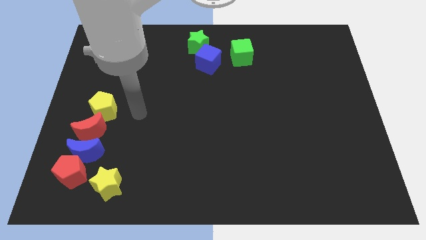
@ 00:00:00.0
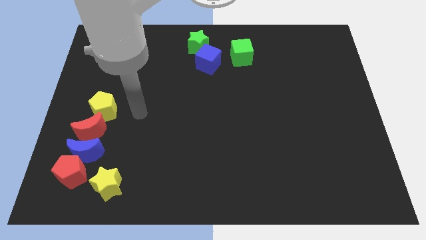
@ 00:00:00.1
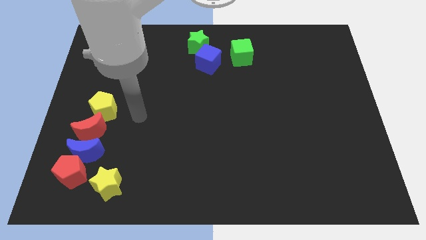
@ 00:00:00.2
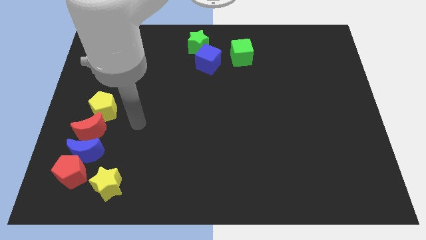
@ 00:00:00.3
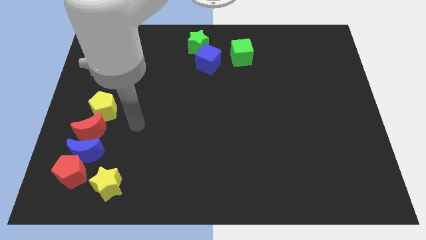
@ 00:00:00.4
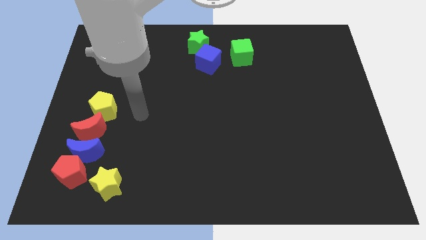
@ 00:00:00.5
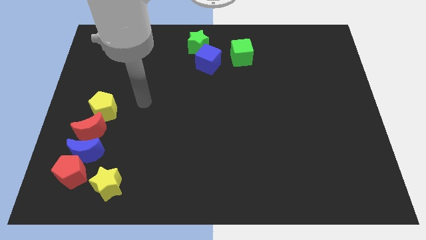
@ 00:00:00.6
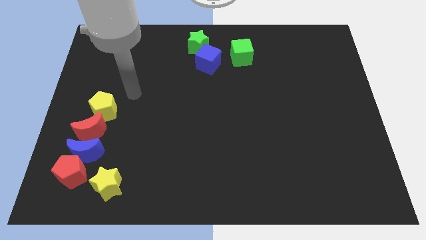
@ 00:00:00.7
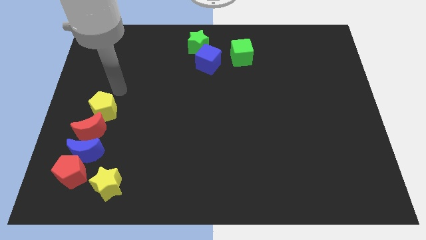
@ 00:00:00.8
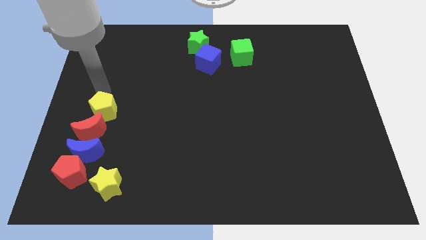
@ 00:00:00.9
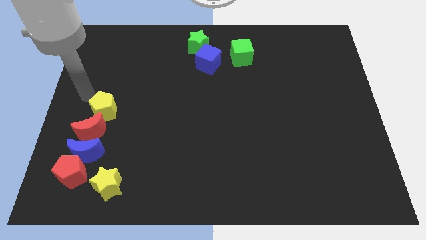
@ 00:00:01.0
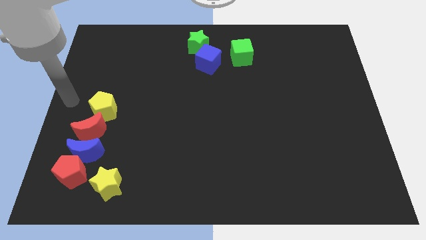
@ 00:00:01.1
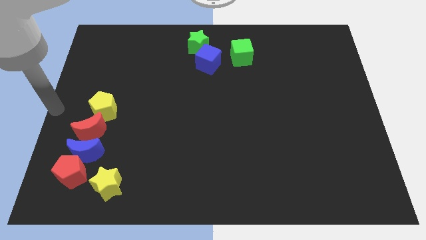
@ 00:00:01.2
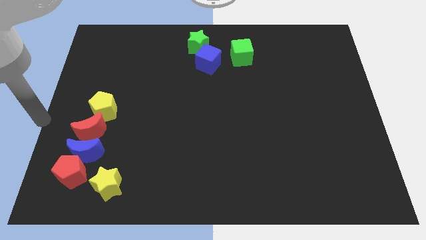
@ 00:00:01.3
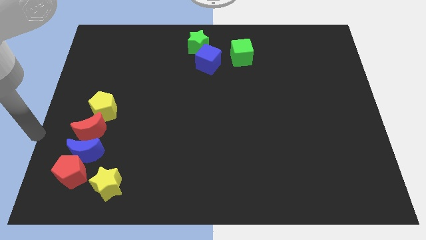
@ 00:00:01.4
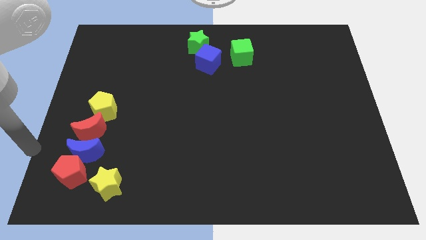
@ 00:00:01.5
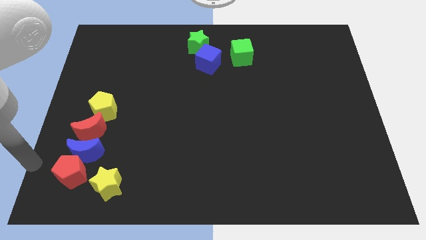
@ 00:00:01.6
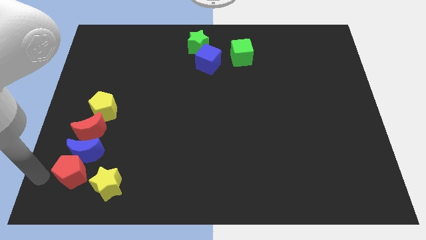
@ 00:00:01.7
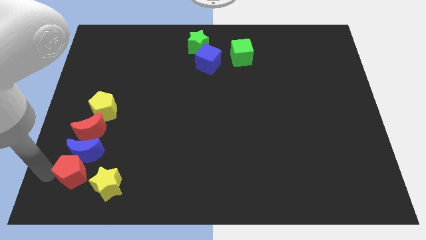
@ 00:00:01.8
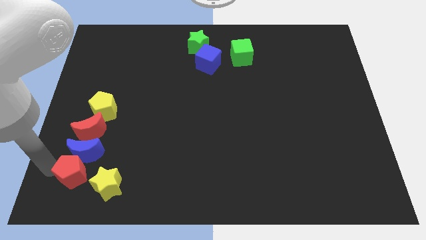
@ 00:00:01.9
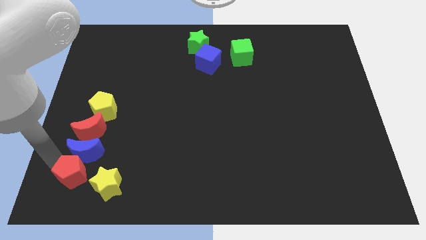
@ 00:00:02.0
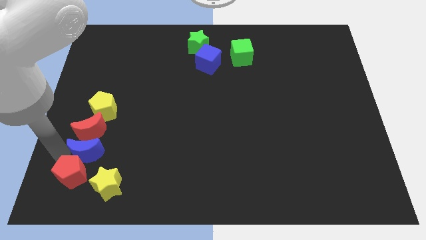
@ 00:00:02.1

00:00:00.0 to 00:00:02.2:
move the arm to the left of the blue moon

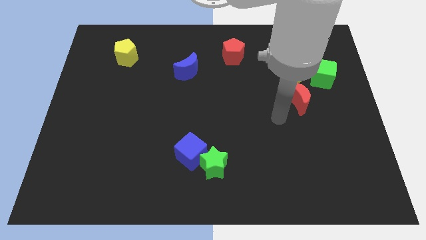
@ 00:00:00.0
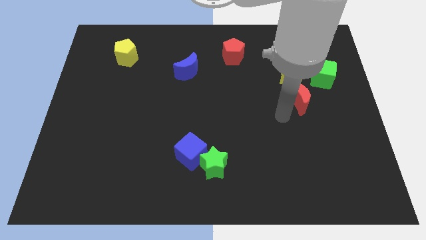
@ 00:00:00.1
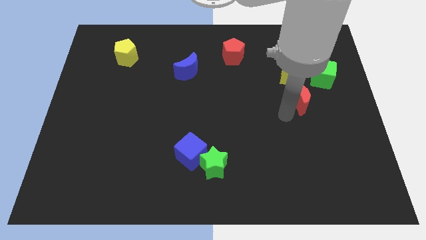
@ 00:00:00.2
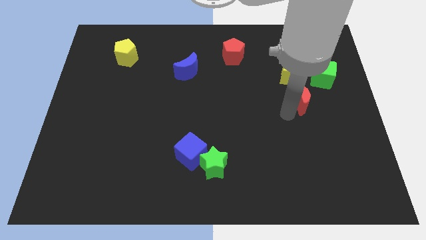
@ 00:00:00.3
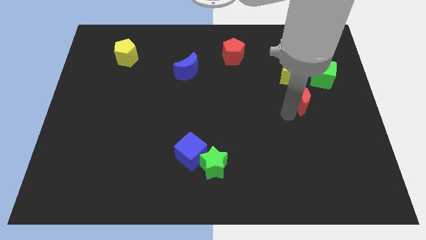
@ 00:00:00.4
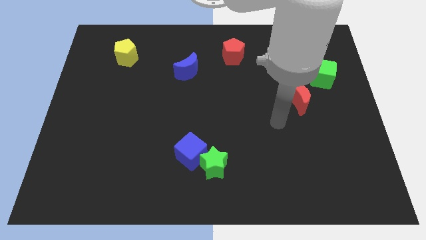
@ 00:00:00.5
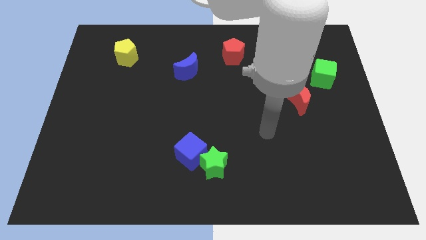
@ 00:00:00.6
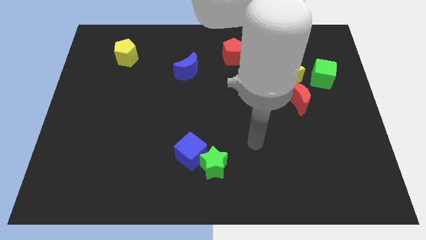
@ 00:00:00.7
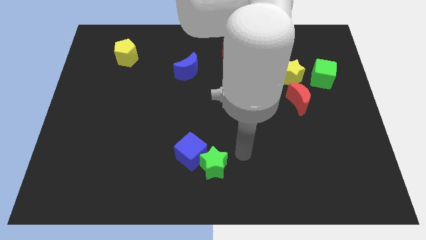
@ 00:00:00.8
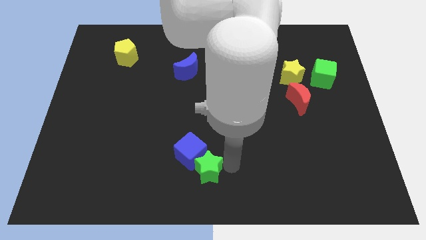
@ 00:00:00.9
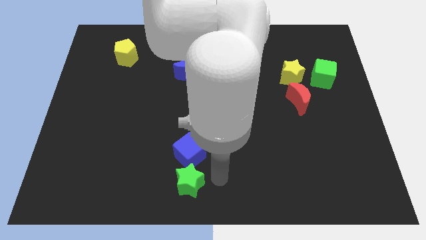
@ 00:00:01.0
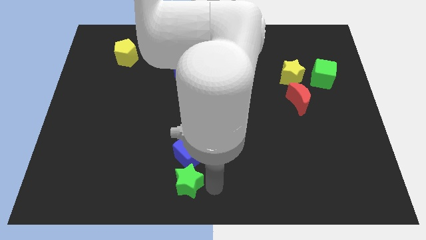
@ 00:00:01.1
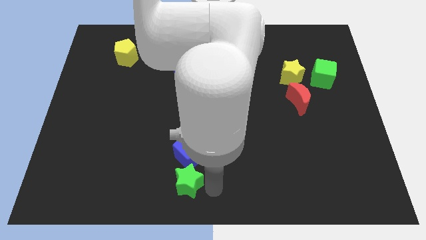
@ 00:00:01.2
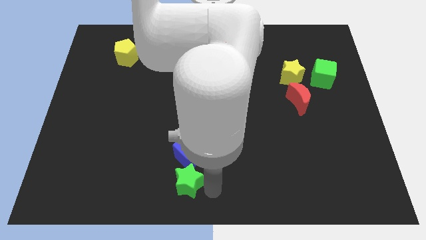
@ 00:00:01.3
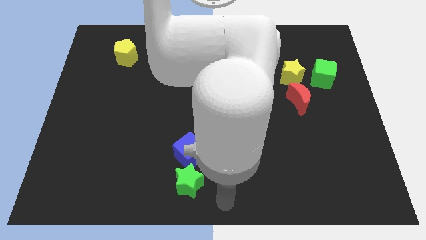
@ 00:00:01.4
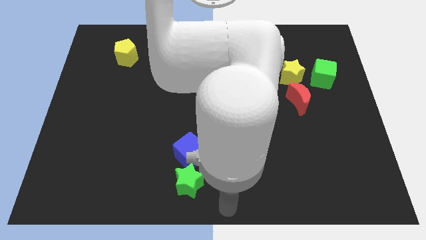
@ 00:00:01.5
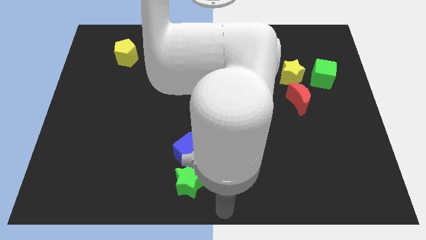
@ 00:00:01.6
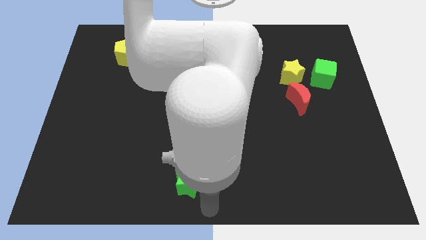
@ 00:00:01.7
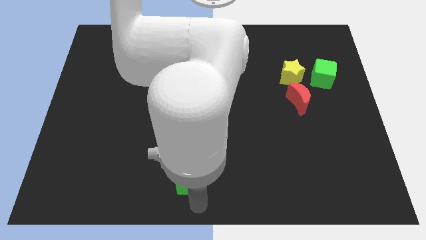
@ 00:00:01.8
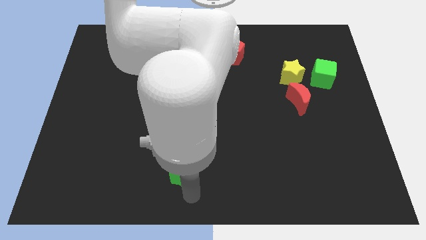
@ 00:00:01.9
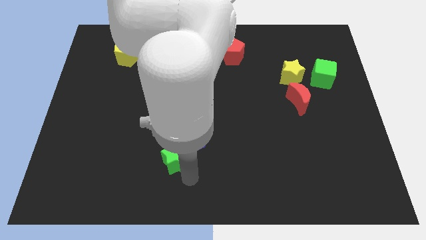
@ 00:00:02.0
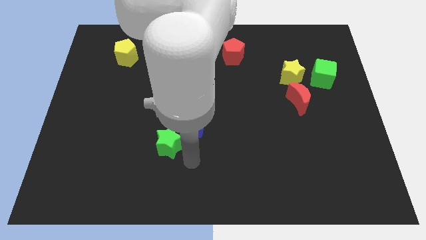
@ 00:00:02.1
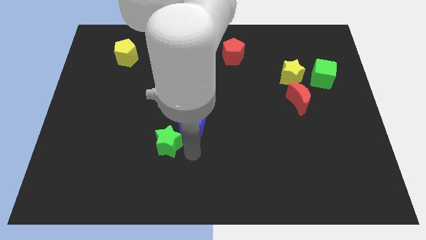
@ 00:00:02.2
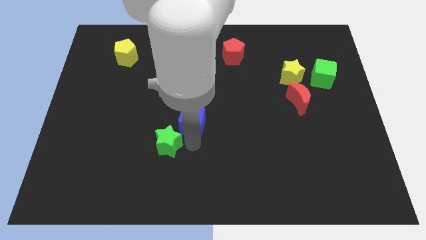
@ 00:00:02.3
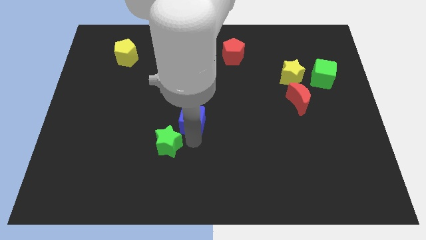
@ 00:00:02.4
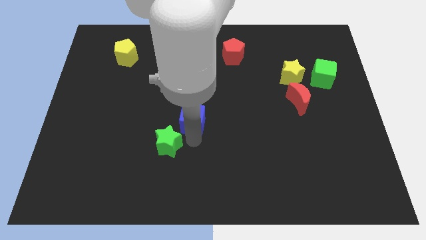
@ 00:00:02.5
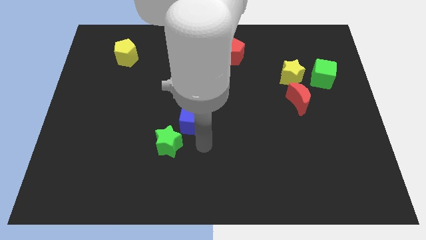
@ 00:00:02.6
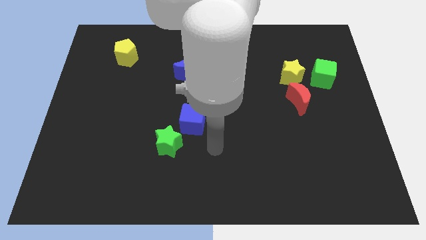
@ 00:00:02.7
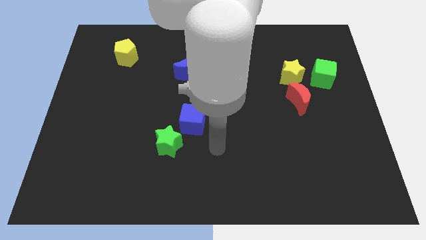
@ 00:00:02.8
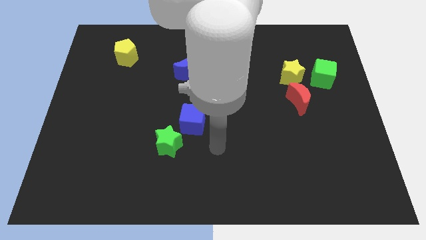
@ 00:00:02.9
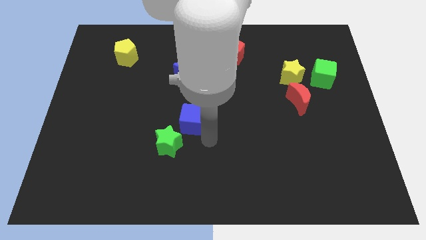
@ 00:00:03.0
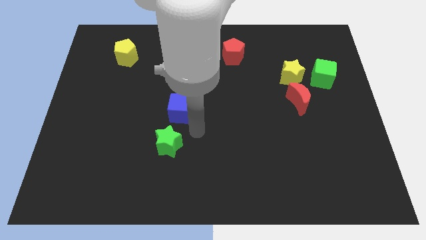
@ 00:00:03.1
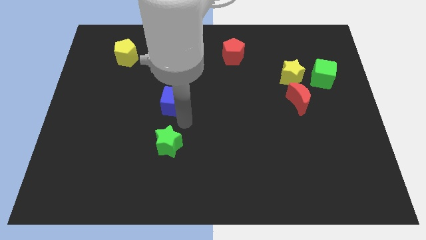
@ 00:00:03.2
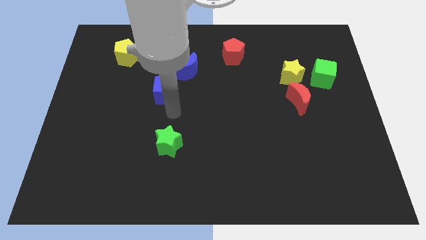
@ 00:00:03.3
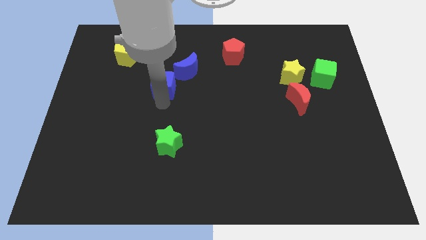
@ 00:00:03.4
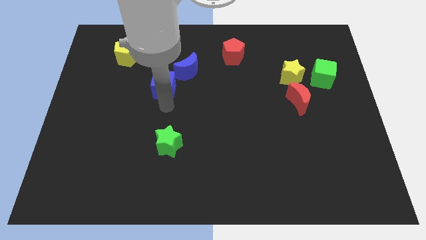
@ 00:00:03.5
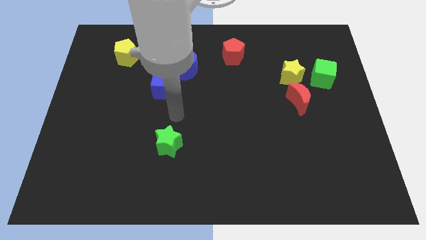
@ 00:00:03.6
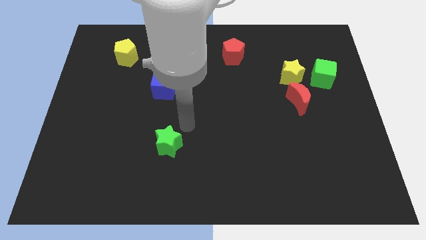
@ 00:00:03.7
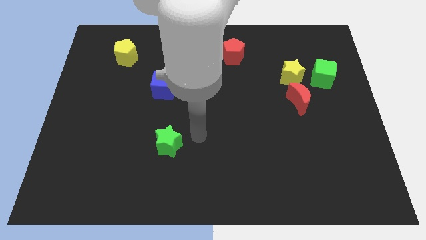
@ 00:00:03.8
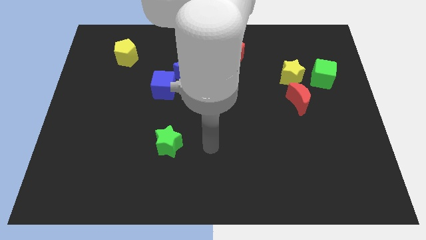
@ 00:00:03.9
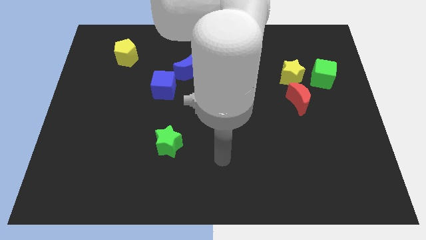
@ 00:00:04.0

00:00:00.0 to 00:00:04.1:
separate blue cube from the green star

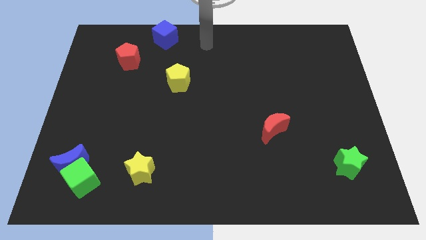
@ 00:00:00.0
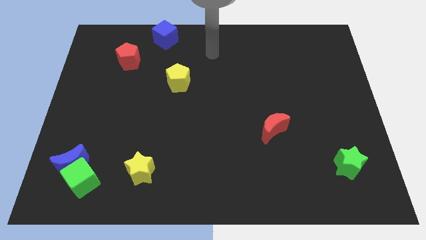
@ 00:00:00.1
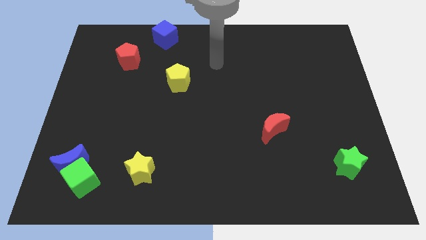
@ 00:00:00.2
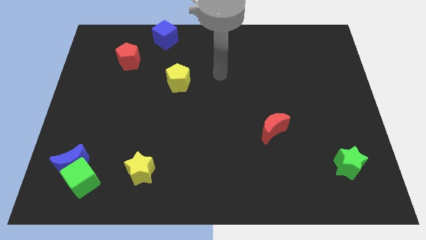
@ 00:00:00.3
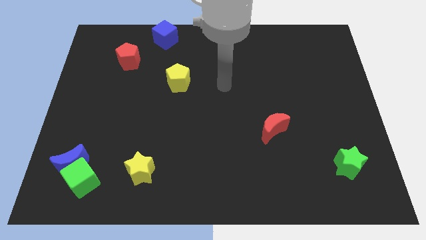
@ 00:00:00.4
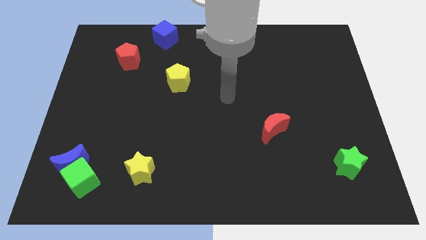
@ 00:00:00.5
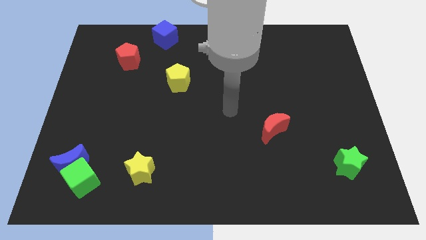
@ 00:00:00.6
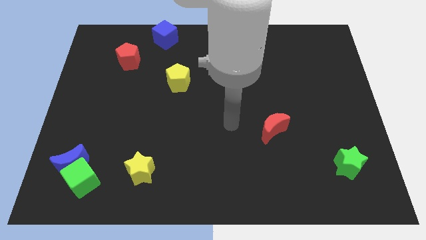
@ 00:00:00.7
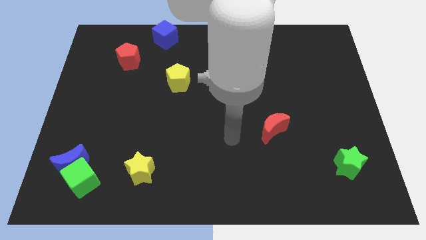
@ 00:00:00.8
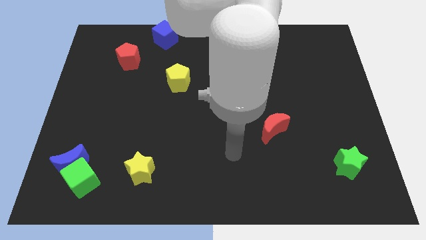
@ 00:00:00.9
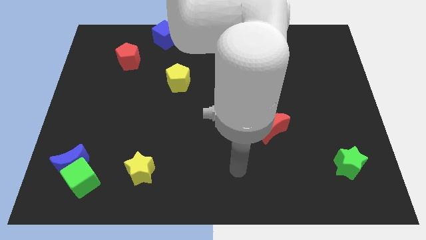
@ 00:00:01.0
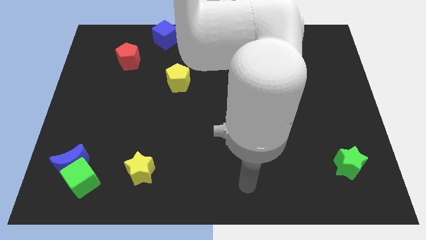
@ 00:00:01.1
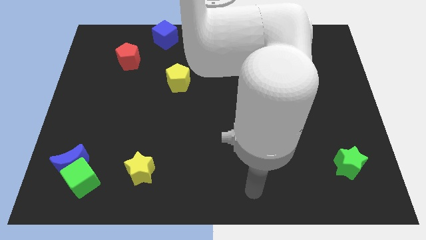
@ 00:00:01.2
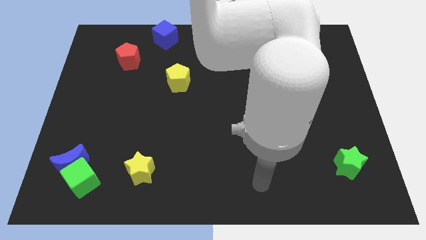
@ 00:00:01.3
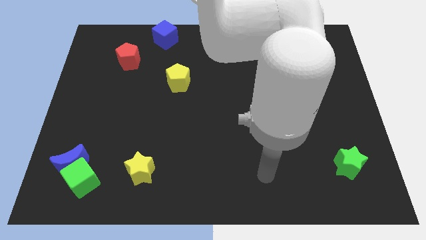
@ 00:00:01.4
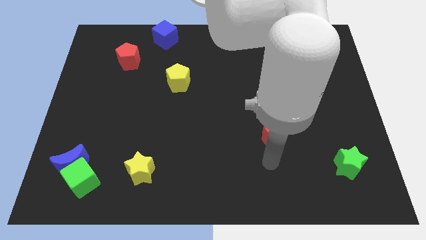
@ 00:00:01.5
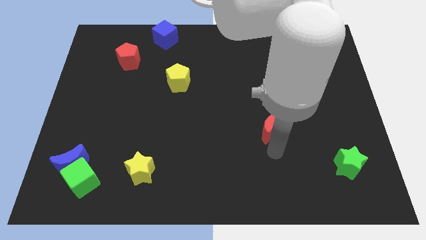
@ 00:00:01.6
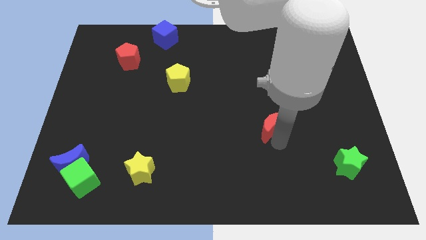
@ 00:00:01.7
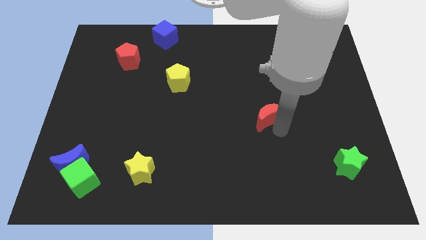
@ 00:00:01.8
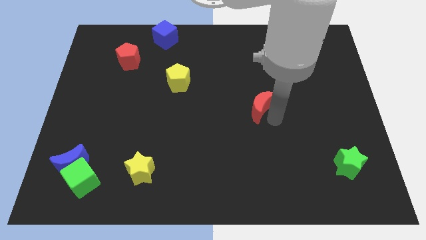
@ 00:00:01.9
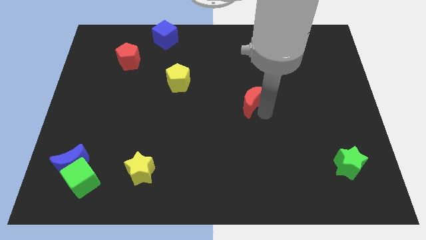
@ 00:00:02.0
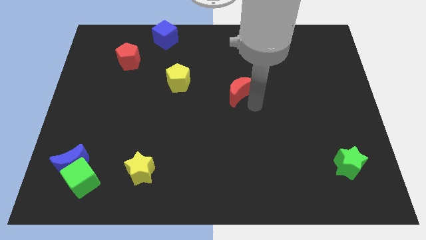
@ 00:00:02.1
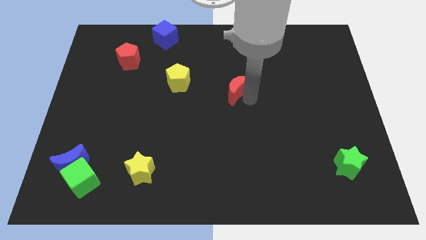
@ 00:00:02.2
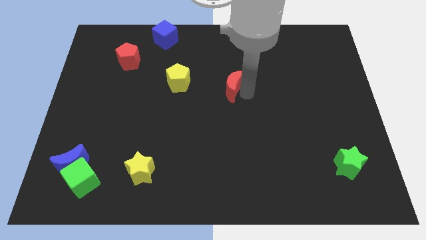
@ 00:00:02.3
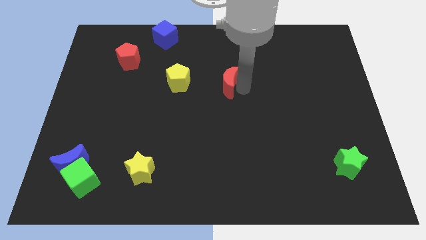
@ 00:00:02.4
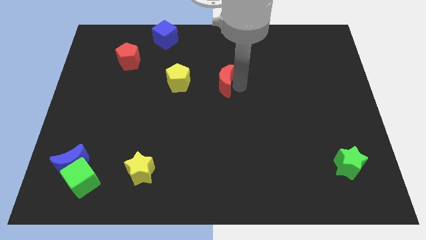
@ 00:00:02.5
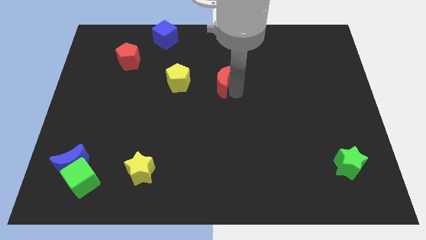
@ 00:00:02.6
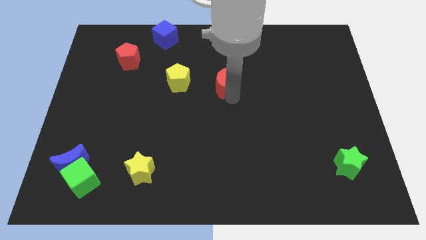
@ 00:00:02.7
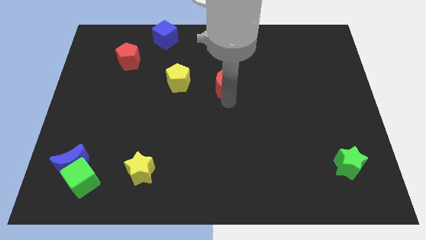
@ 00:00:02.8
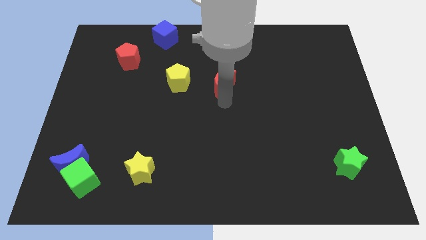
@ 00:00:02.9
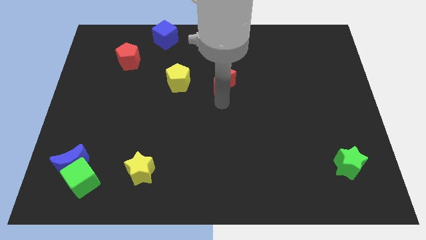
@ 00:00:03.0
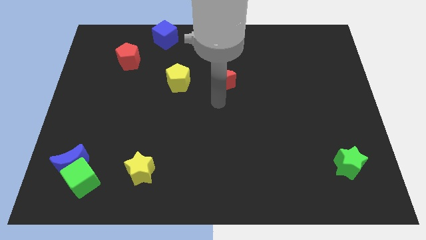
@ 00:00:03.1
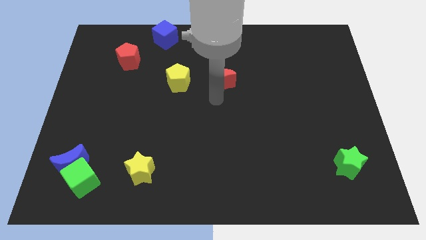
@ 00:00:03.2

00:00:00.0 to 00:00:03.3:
place the red moon horizontally to the right side of the yellow pentagon
